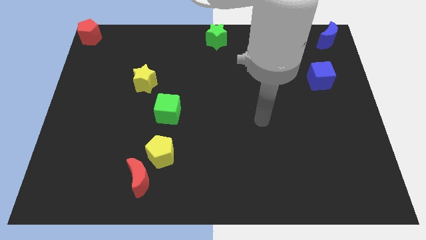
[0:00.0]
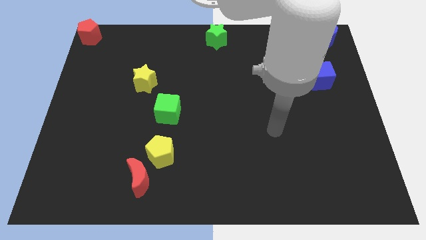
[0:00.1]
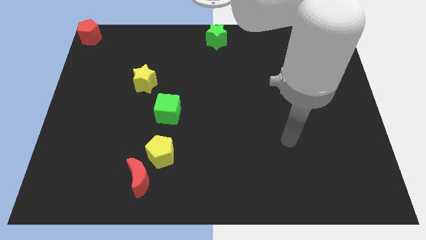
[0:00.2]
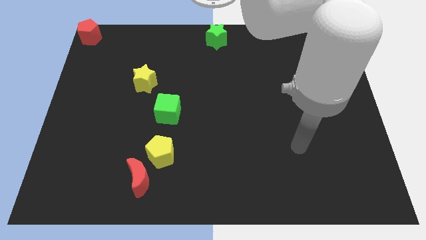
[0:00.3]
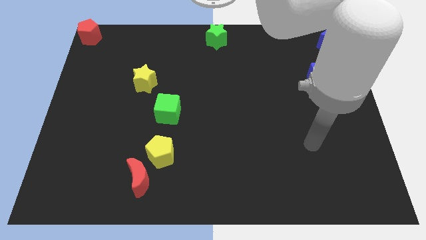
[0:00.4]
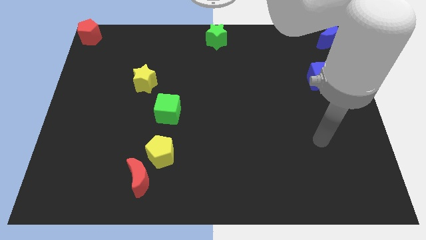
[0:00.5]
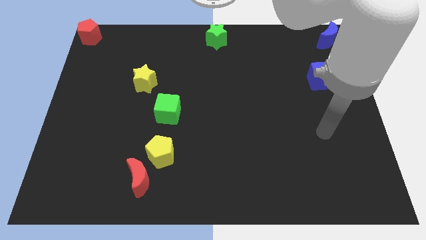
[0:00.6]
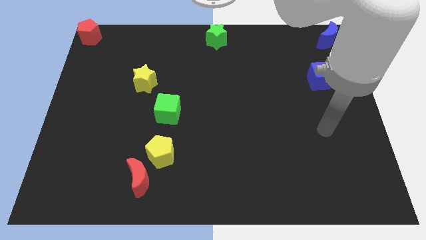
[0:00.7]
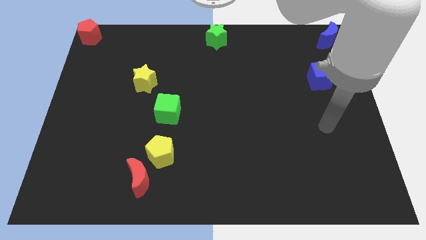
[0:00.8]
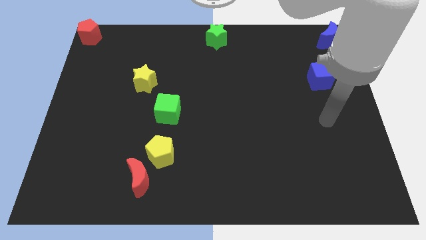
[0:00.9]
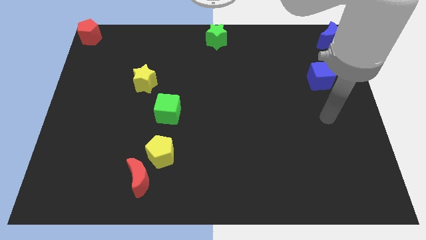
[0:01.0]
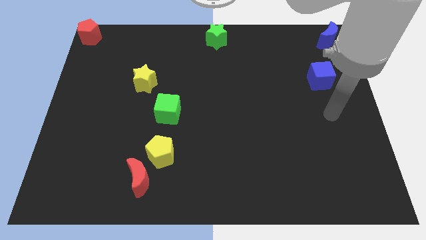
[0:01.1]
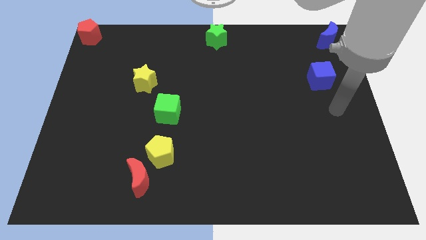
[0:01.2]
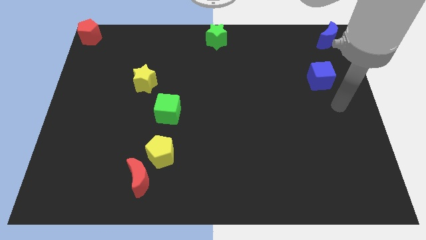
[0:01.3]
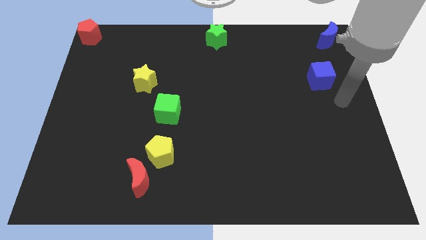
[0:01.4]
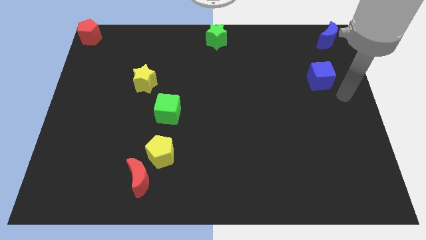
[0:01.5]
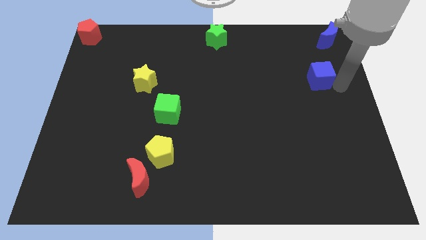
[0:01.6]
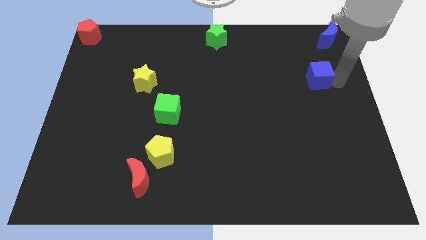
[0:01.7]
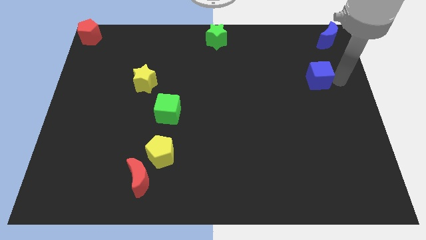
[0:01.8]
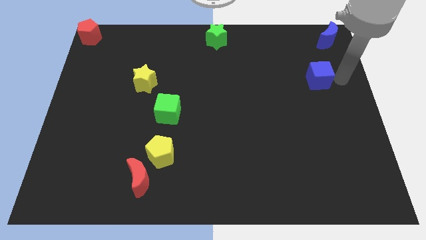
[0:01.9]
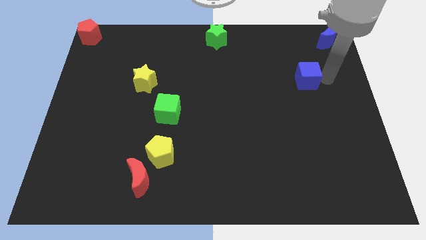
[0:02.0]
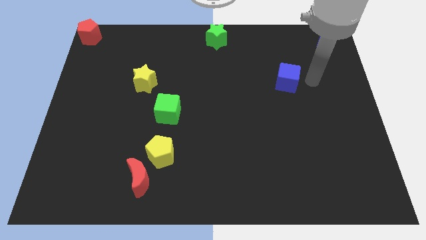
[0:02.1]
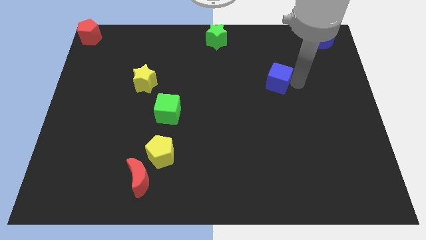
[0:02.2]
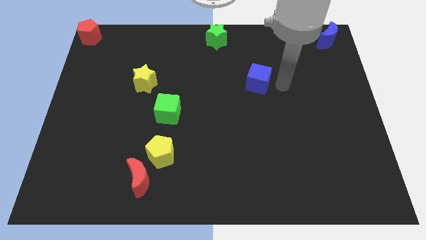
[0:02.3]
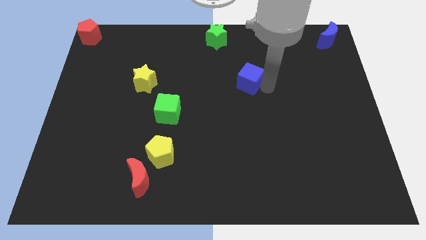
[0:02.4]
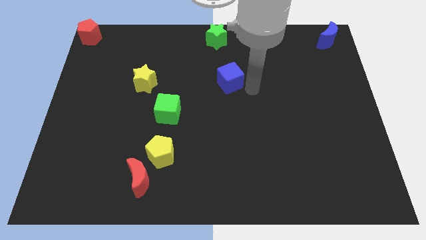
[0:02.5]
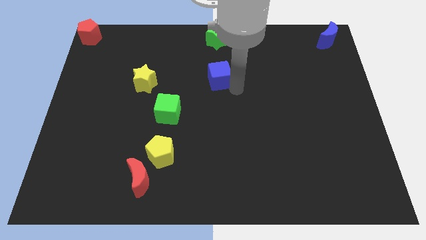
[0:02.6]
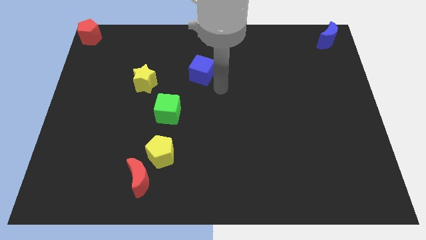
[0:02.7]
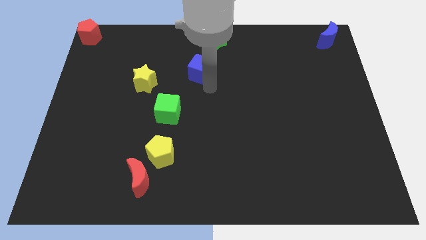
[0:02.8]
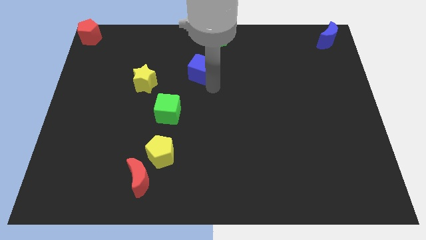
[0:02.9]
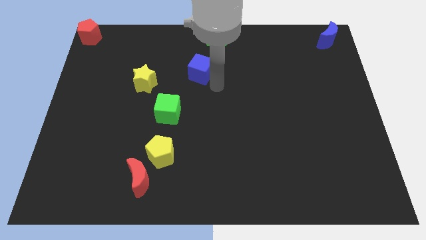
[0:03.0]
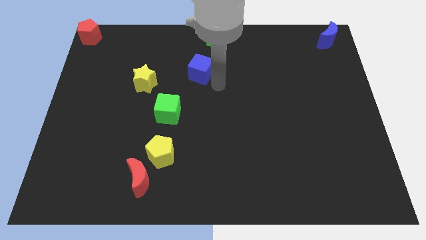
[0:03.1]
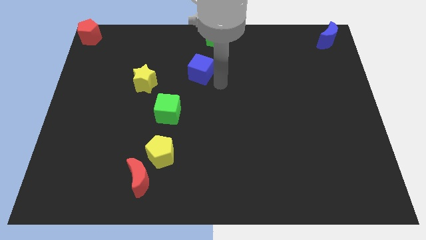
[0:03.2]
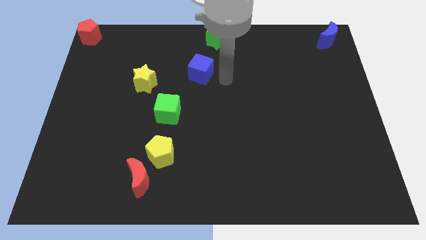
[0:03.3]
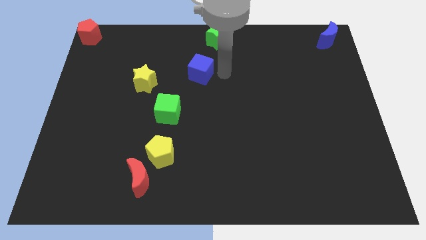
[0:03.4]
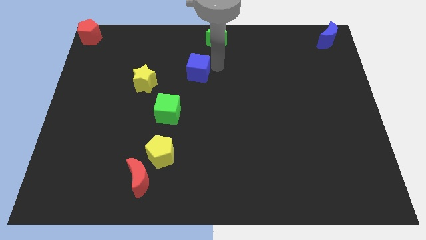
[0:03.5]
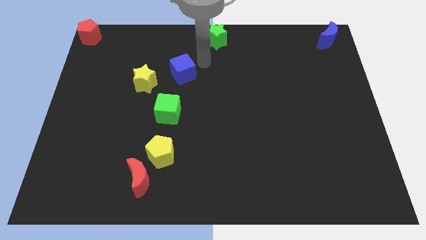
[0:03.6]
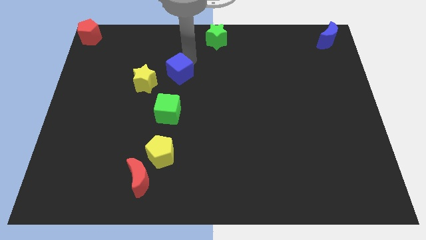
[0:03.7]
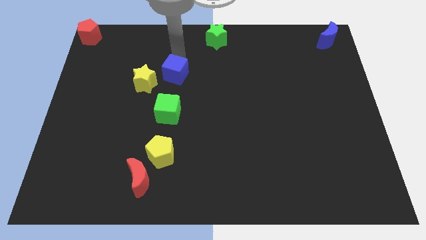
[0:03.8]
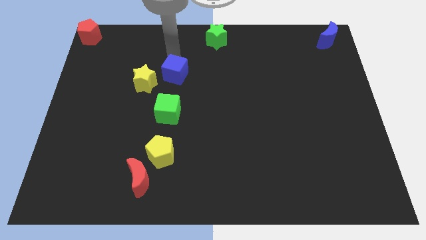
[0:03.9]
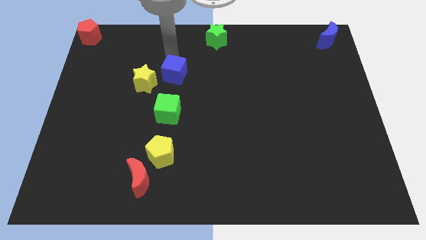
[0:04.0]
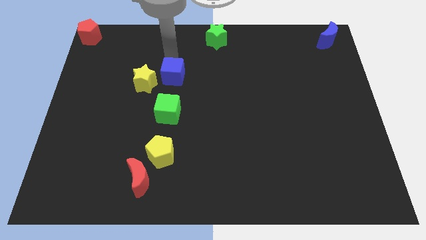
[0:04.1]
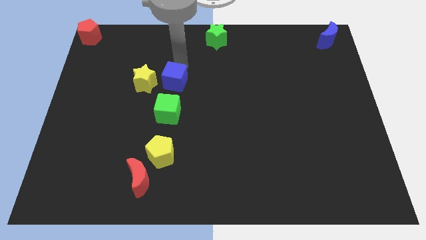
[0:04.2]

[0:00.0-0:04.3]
push the blue cube towards the yellow star

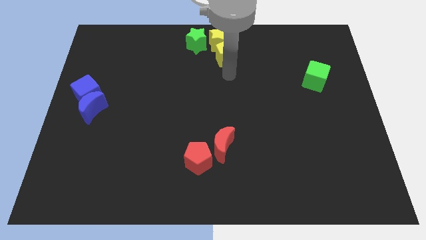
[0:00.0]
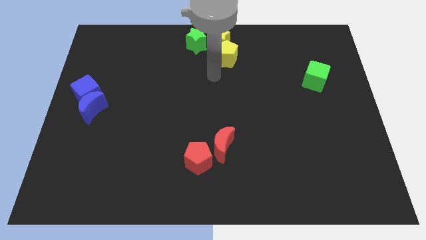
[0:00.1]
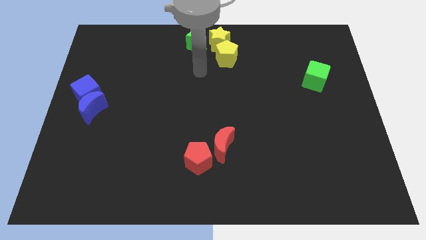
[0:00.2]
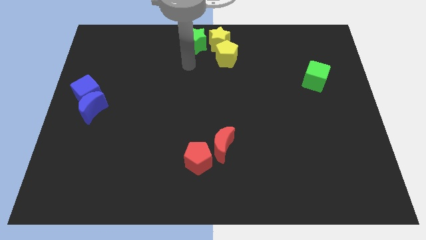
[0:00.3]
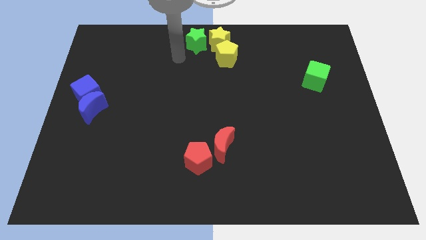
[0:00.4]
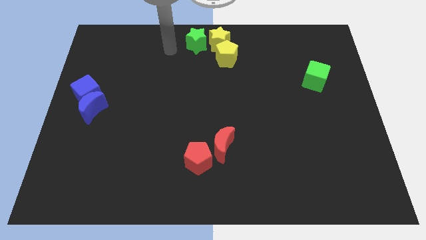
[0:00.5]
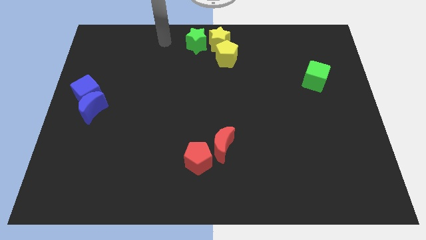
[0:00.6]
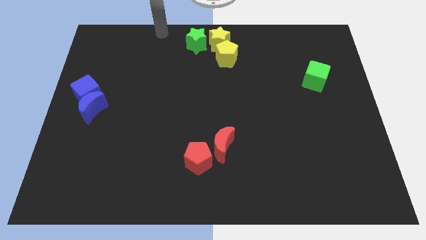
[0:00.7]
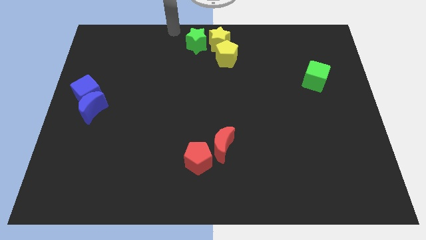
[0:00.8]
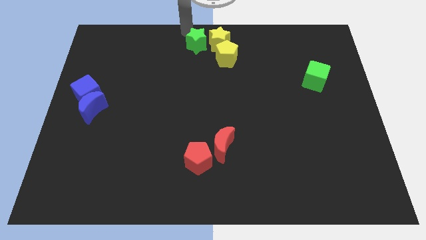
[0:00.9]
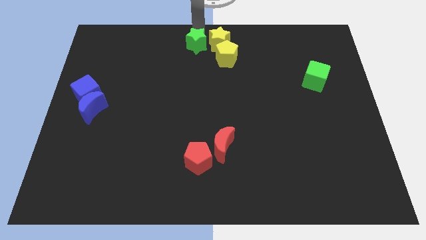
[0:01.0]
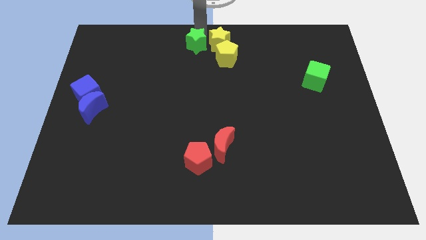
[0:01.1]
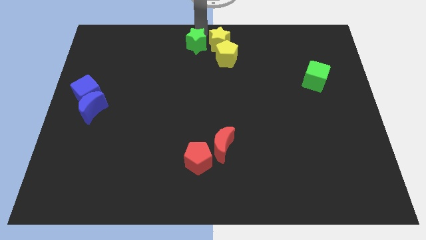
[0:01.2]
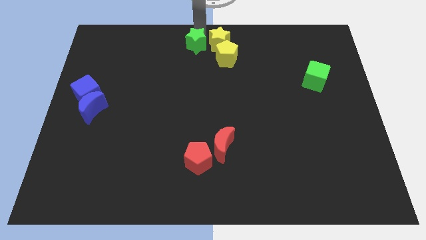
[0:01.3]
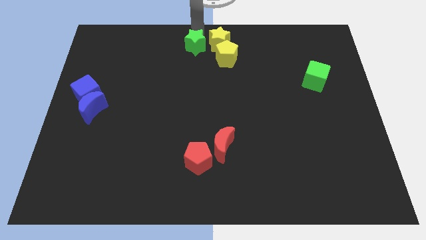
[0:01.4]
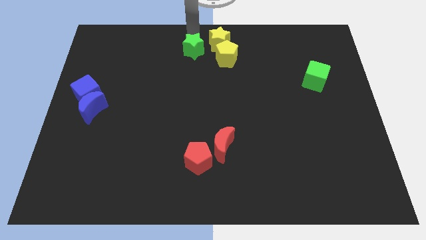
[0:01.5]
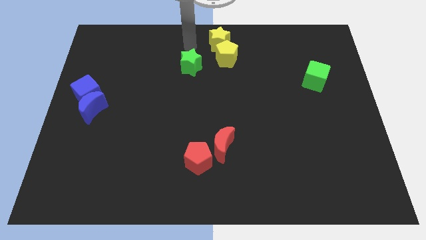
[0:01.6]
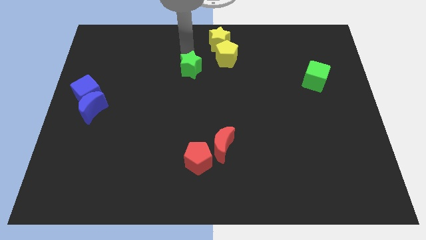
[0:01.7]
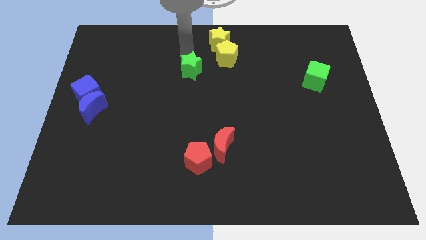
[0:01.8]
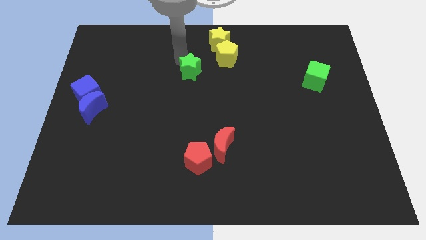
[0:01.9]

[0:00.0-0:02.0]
drag the green star diagonal to yellow pentagon

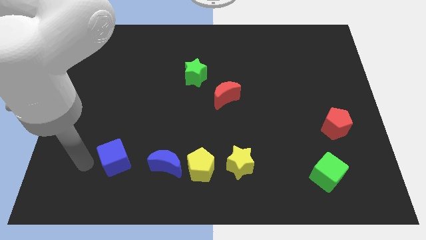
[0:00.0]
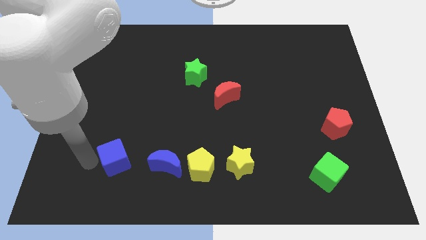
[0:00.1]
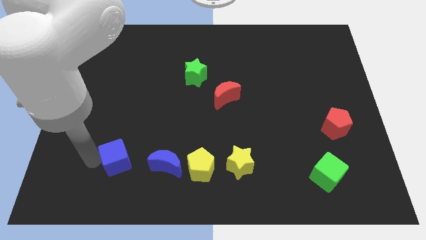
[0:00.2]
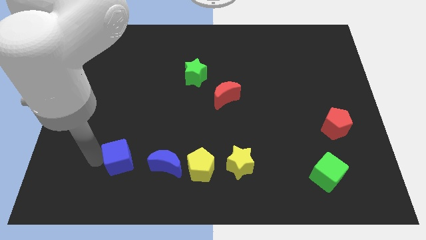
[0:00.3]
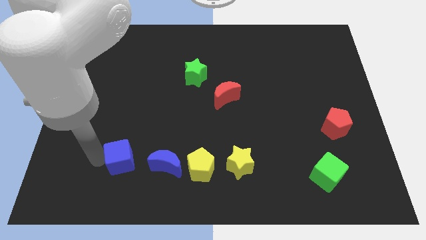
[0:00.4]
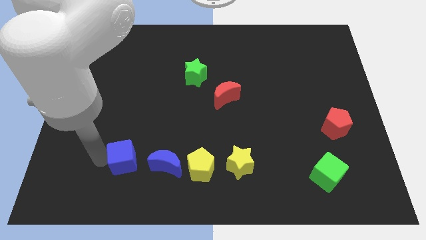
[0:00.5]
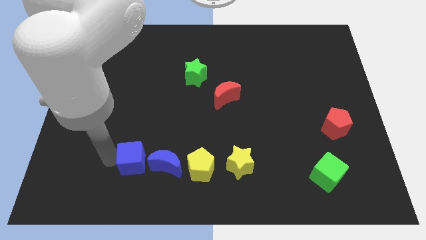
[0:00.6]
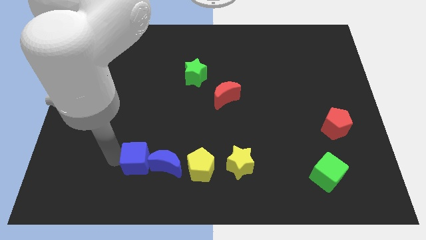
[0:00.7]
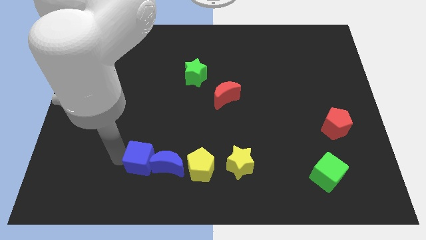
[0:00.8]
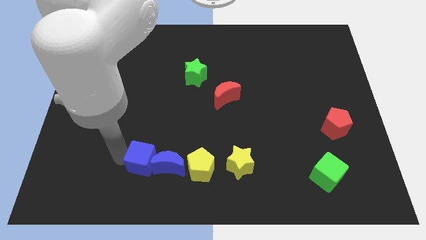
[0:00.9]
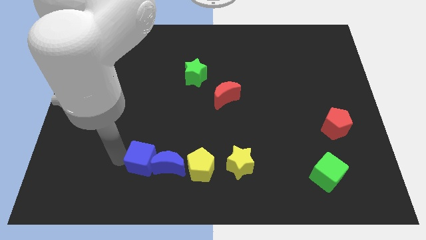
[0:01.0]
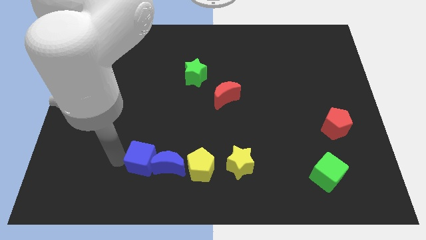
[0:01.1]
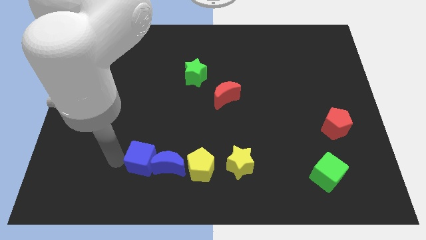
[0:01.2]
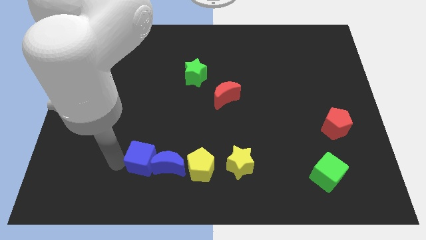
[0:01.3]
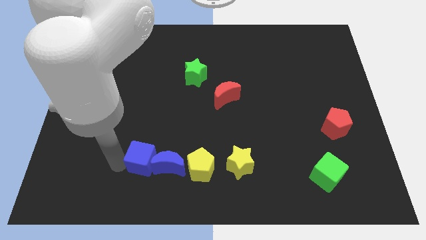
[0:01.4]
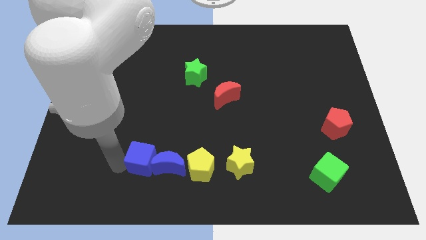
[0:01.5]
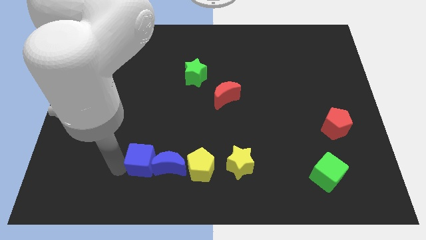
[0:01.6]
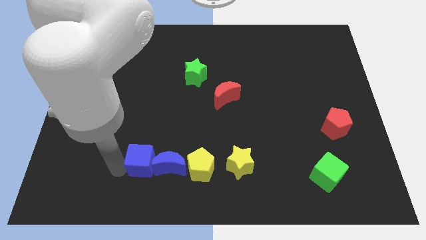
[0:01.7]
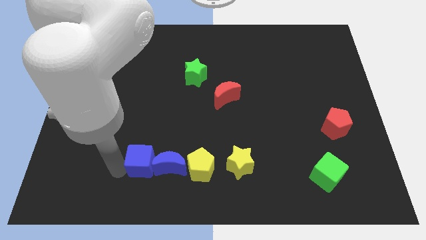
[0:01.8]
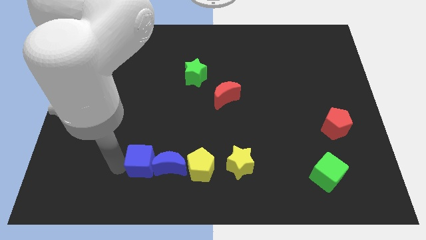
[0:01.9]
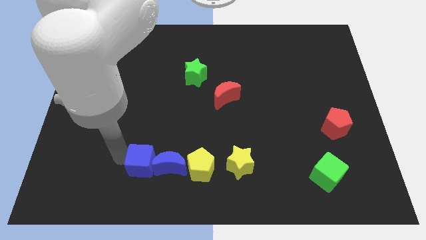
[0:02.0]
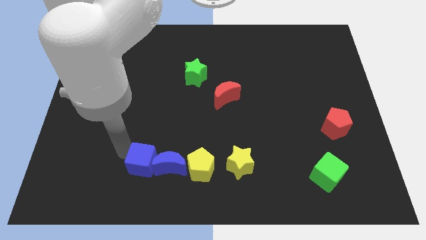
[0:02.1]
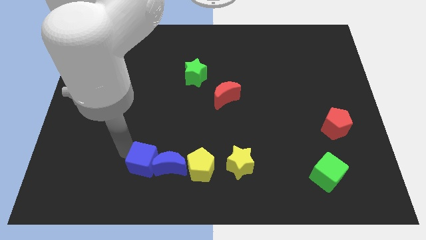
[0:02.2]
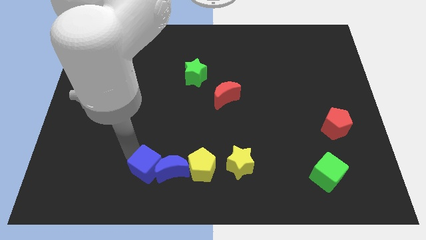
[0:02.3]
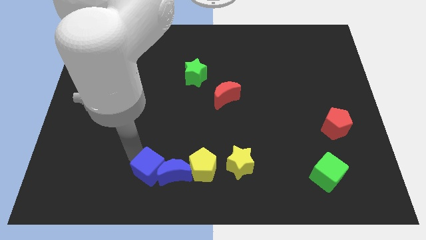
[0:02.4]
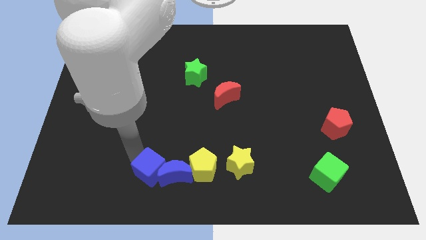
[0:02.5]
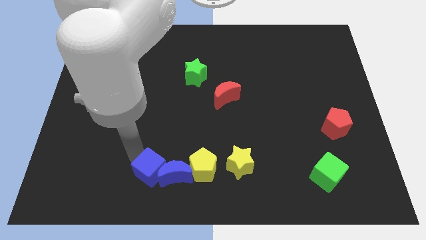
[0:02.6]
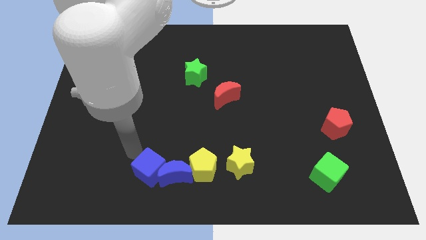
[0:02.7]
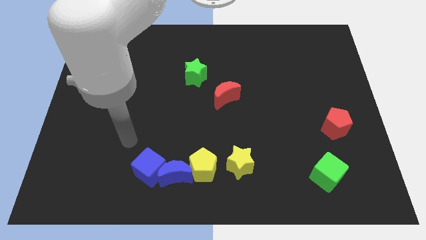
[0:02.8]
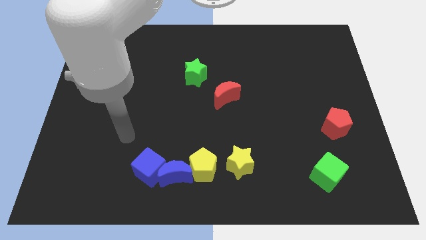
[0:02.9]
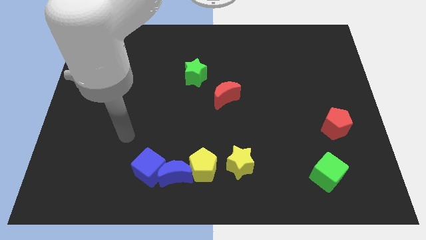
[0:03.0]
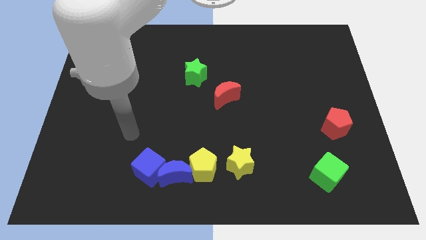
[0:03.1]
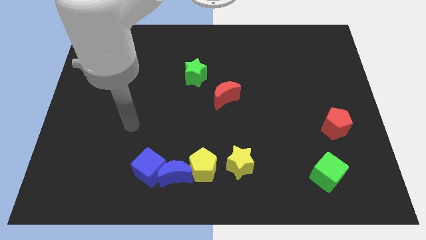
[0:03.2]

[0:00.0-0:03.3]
move the blue cube into the left side of blue crescent
